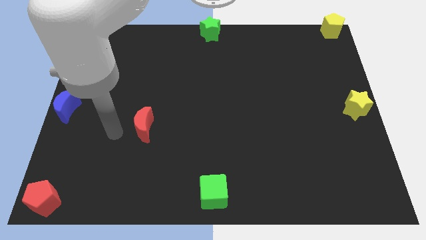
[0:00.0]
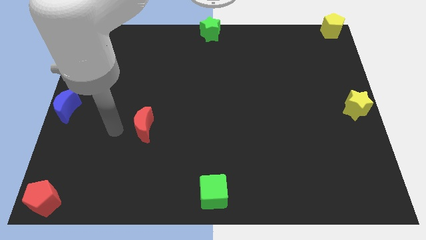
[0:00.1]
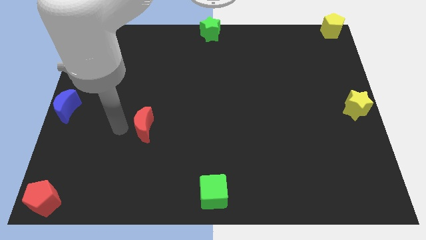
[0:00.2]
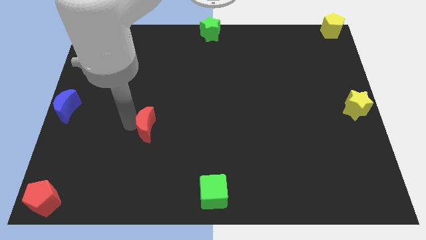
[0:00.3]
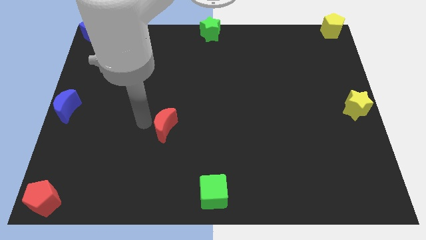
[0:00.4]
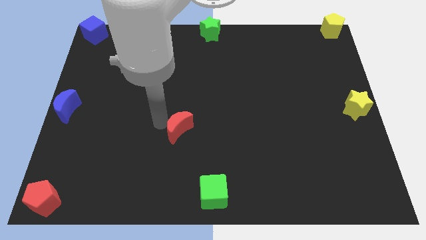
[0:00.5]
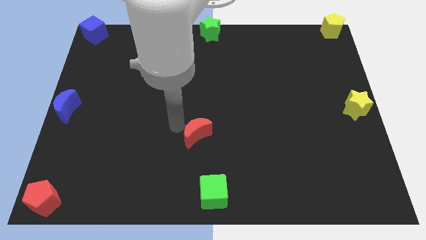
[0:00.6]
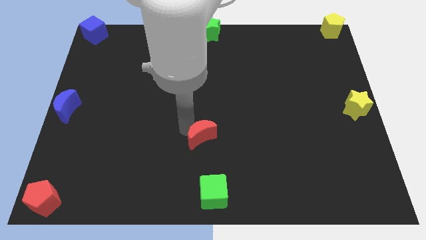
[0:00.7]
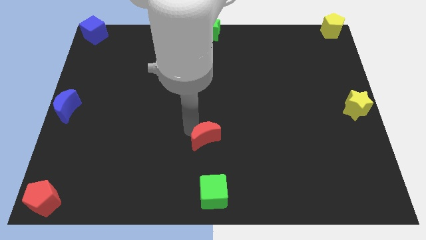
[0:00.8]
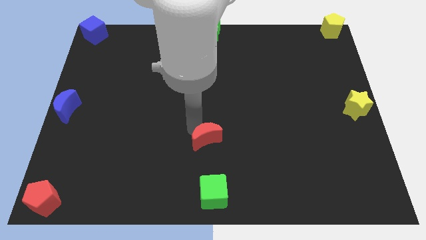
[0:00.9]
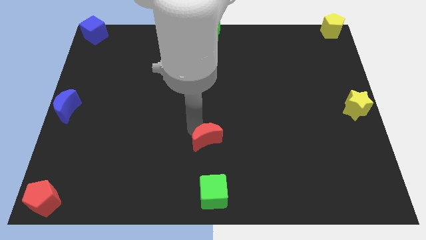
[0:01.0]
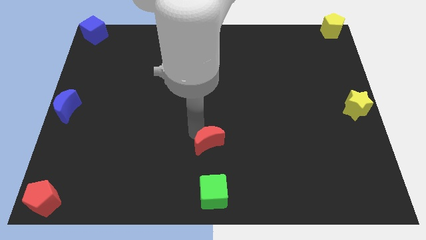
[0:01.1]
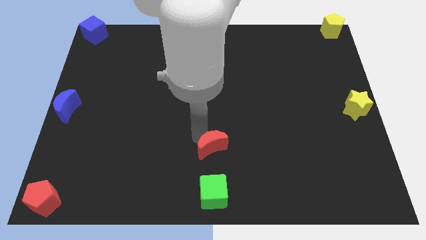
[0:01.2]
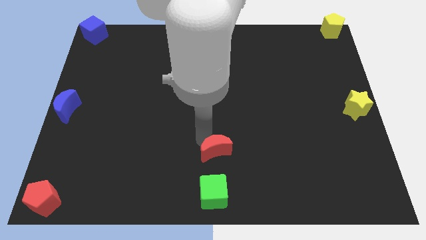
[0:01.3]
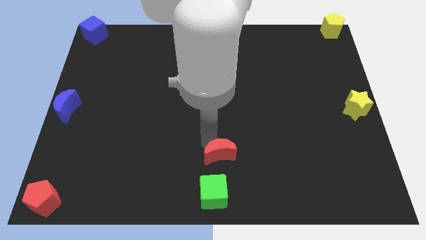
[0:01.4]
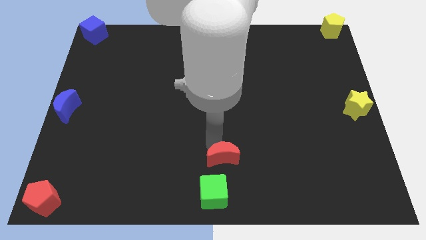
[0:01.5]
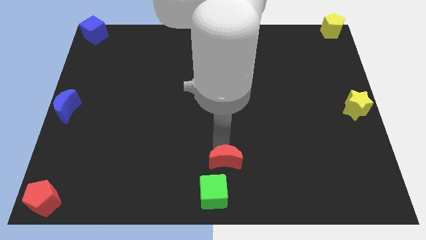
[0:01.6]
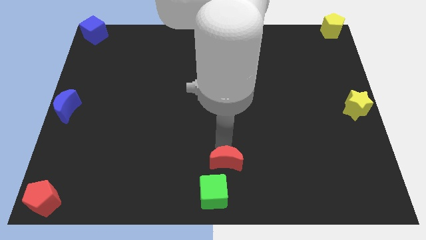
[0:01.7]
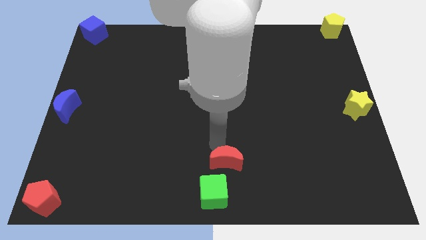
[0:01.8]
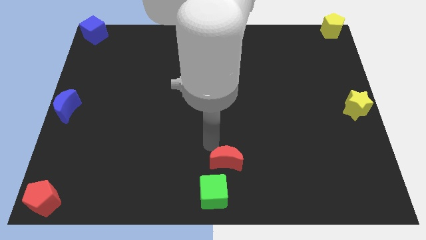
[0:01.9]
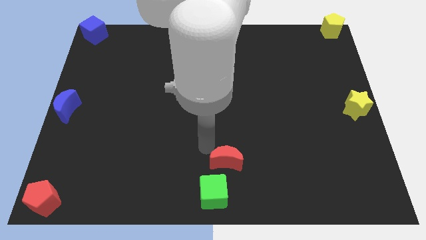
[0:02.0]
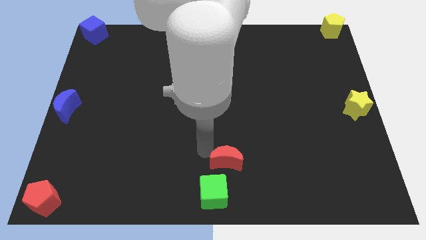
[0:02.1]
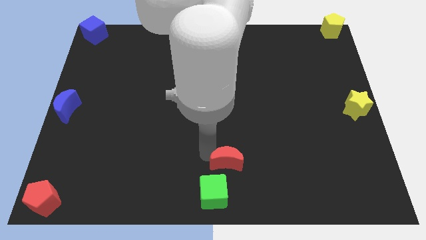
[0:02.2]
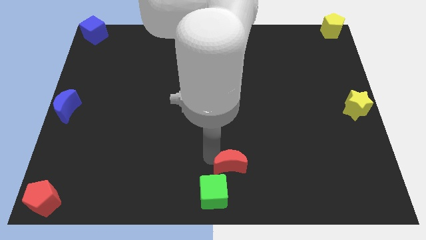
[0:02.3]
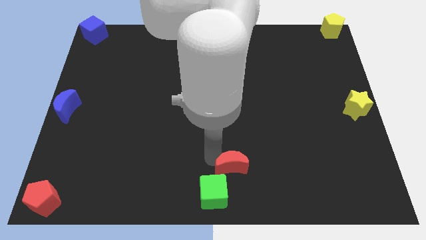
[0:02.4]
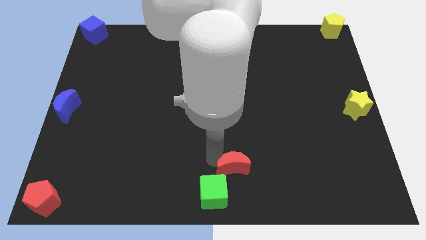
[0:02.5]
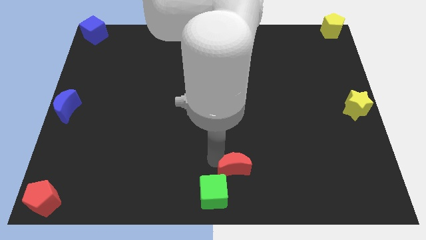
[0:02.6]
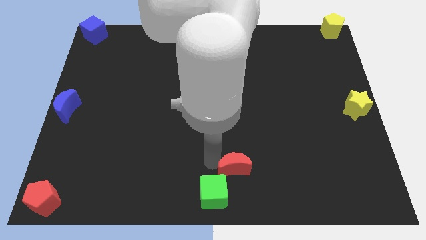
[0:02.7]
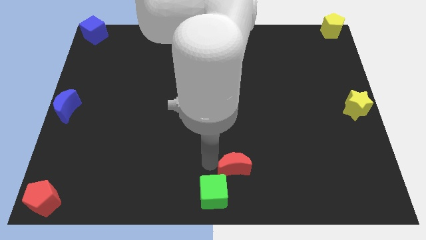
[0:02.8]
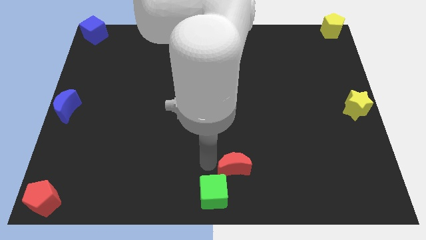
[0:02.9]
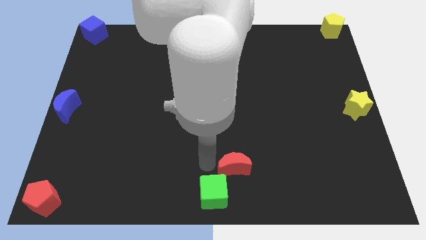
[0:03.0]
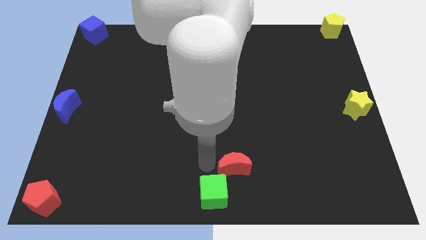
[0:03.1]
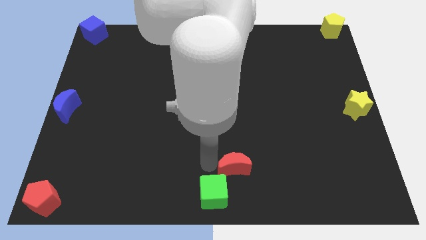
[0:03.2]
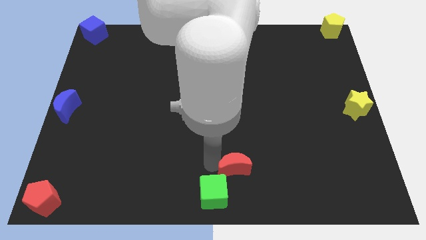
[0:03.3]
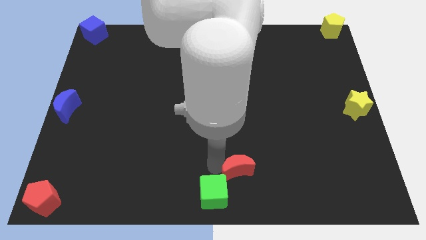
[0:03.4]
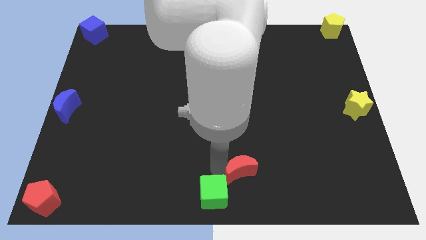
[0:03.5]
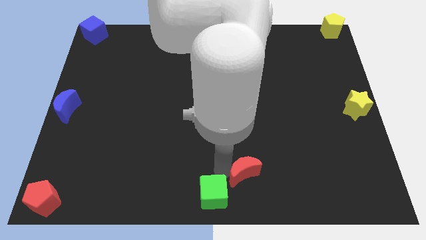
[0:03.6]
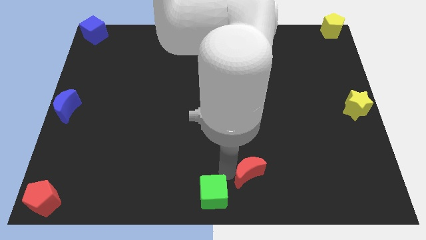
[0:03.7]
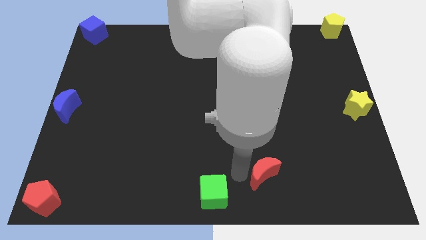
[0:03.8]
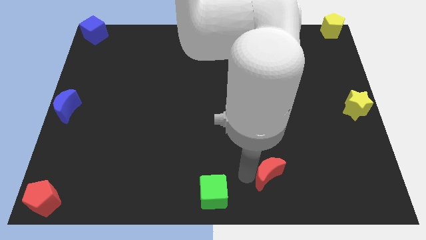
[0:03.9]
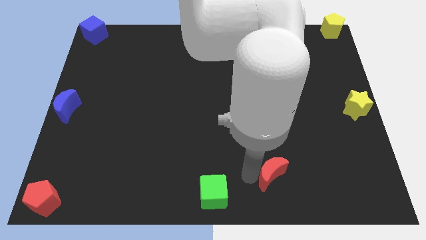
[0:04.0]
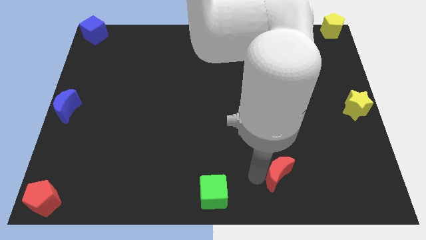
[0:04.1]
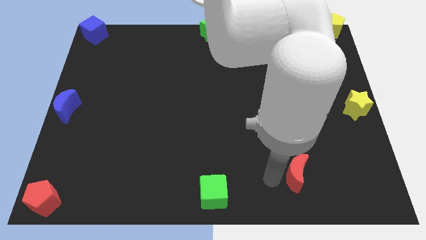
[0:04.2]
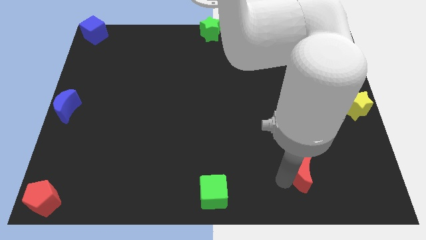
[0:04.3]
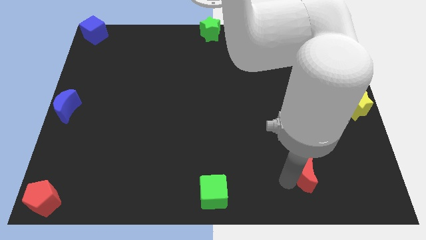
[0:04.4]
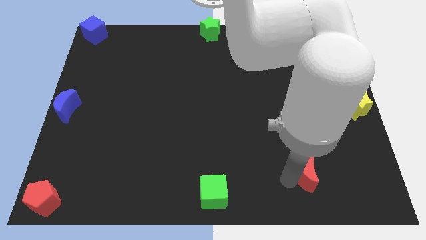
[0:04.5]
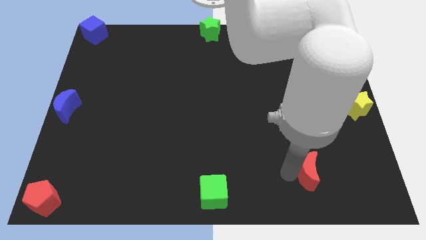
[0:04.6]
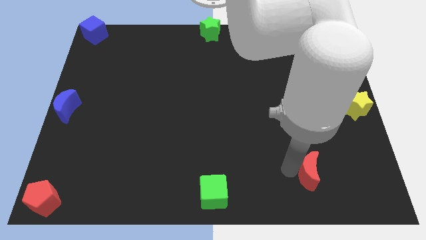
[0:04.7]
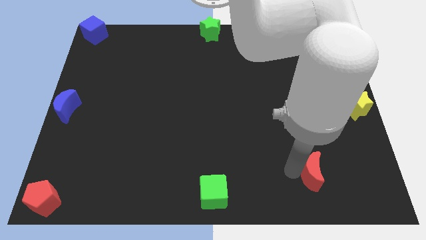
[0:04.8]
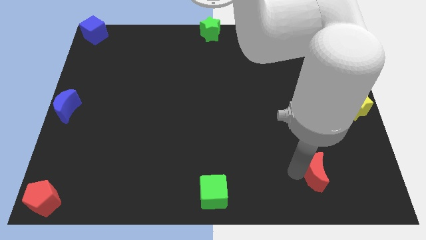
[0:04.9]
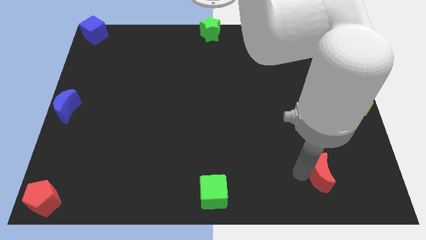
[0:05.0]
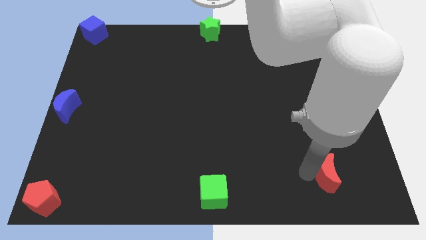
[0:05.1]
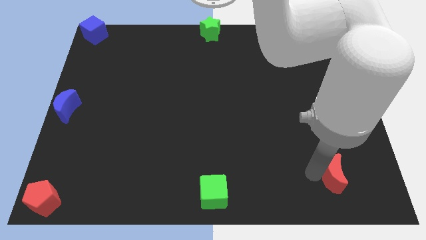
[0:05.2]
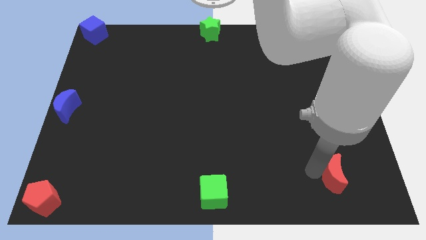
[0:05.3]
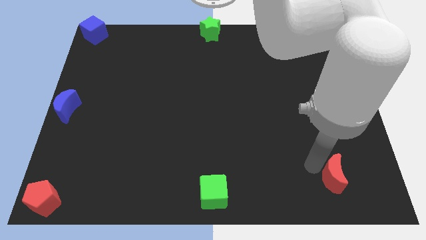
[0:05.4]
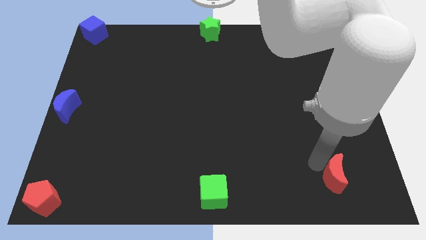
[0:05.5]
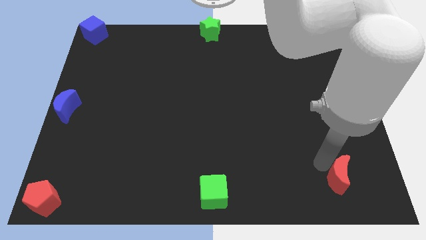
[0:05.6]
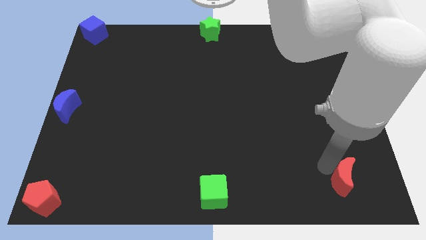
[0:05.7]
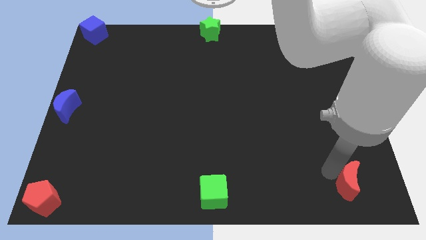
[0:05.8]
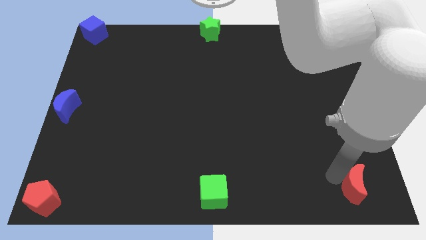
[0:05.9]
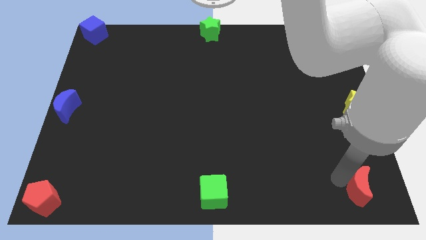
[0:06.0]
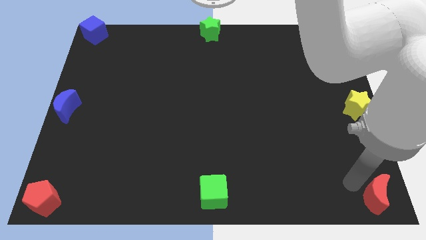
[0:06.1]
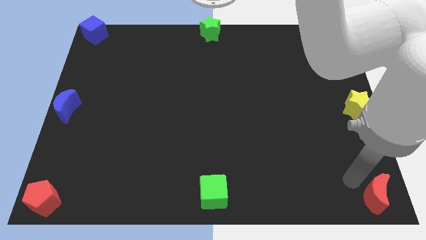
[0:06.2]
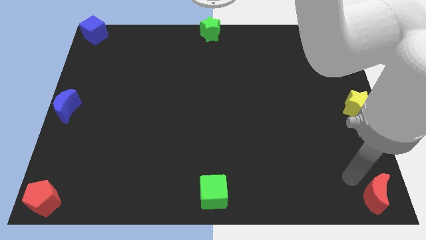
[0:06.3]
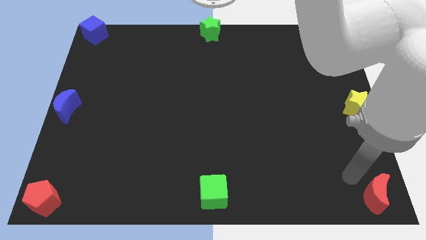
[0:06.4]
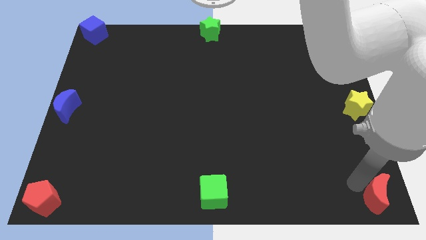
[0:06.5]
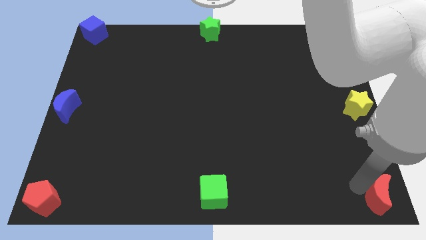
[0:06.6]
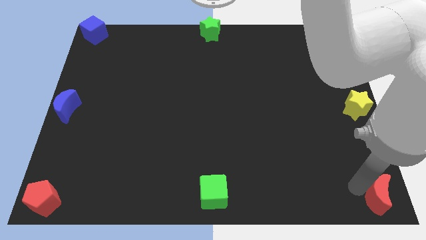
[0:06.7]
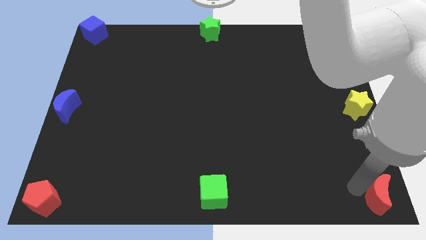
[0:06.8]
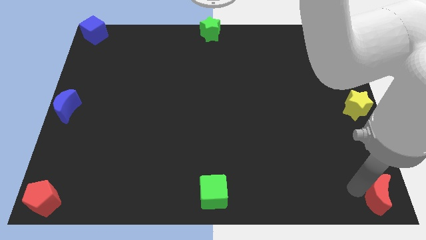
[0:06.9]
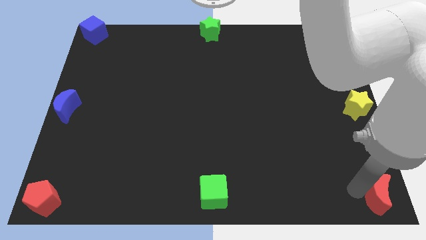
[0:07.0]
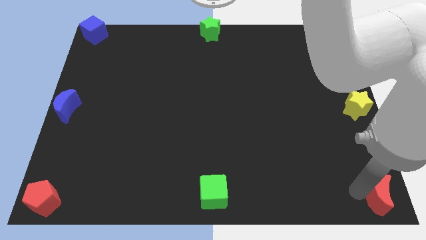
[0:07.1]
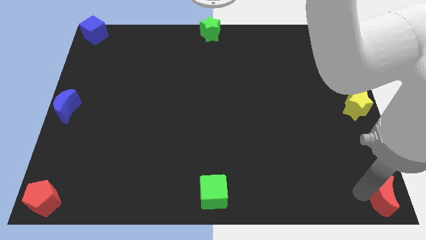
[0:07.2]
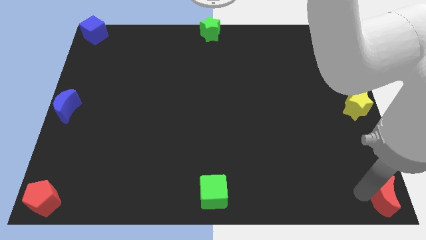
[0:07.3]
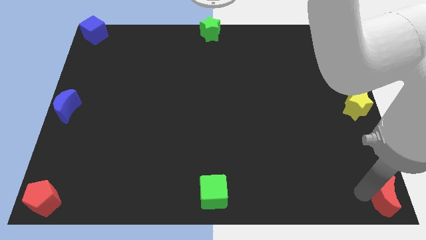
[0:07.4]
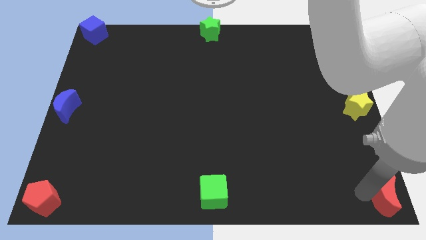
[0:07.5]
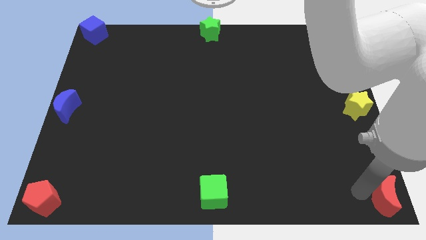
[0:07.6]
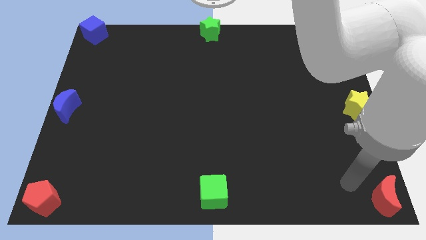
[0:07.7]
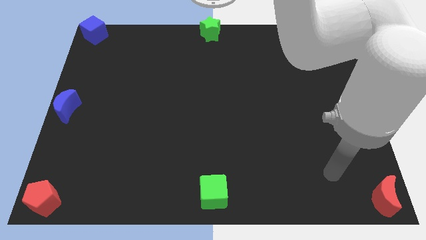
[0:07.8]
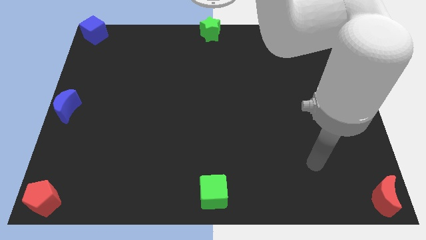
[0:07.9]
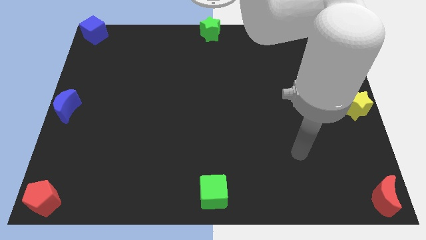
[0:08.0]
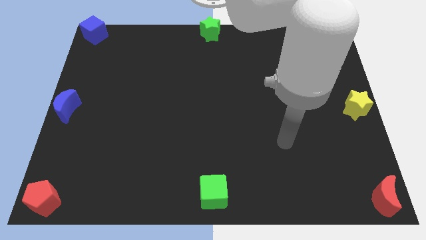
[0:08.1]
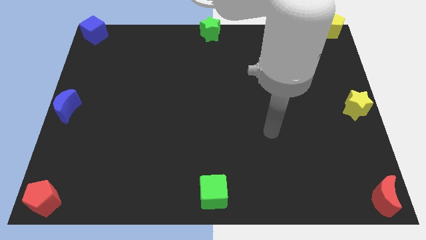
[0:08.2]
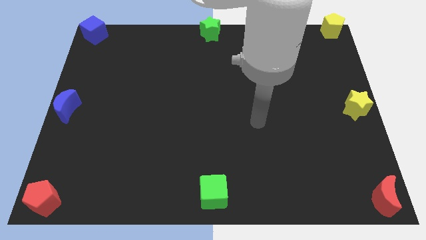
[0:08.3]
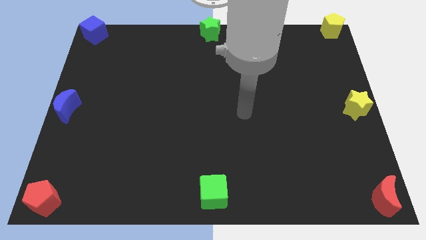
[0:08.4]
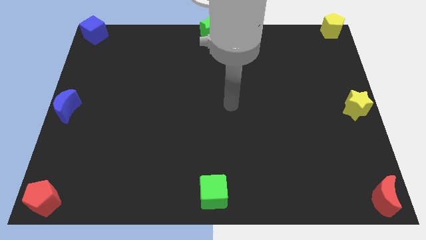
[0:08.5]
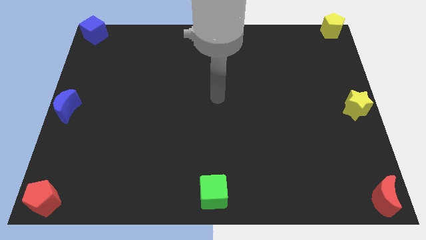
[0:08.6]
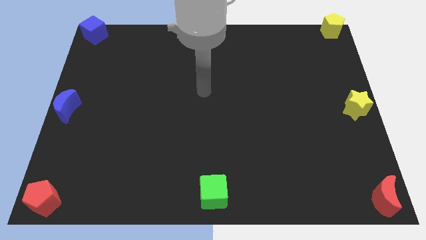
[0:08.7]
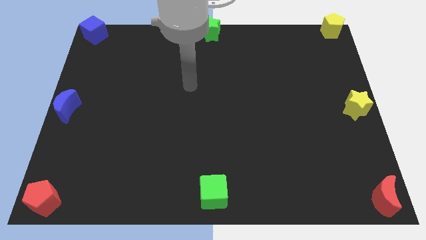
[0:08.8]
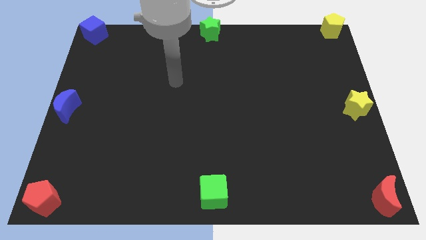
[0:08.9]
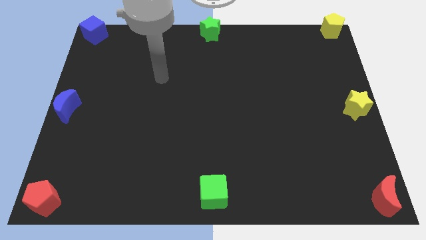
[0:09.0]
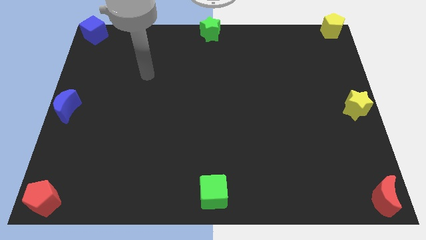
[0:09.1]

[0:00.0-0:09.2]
move red moon towards bottom right side of the board
